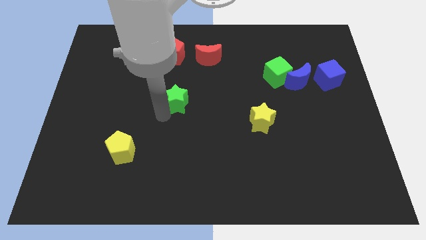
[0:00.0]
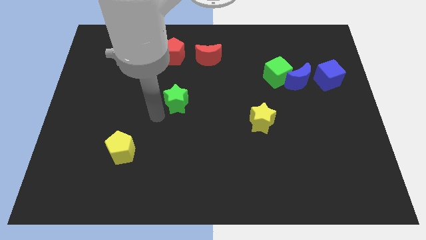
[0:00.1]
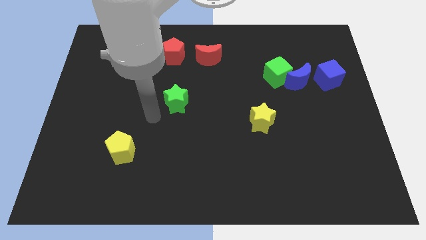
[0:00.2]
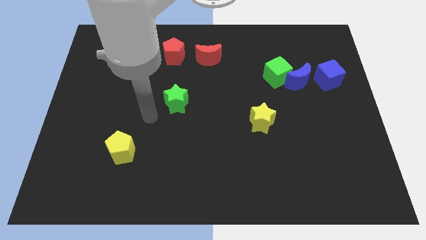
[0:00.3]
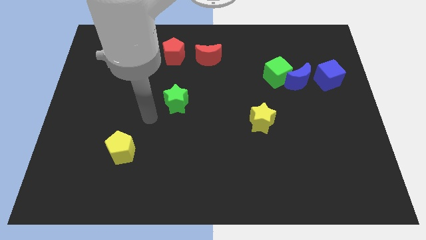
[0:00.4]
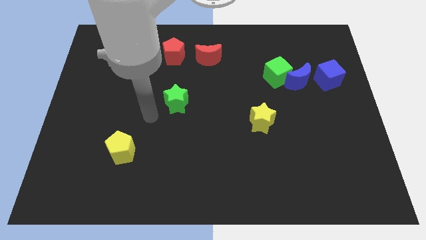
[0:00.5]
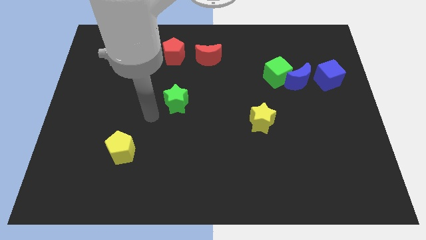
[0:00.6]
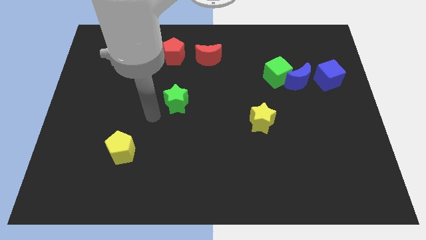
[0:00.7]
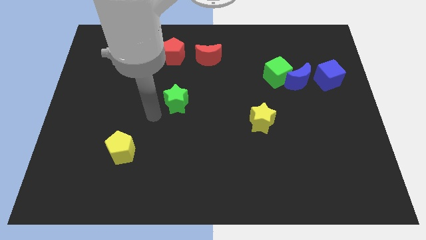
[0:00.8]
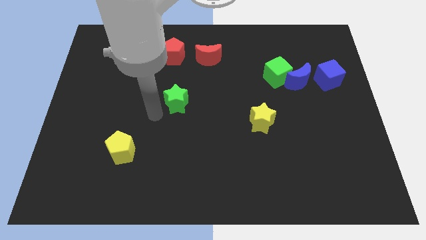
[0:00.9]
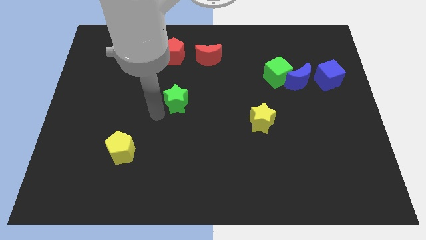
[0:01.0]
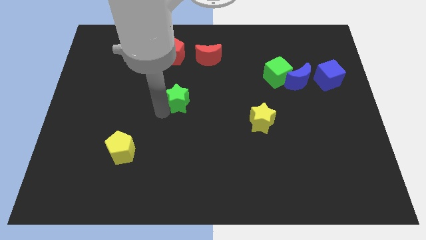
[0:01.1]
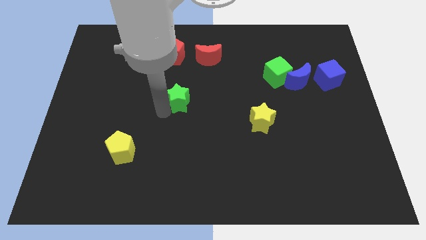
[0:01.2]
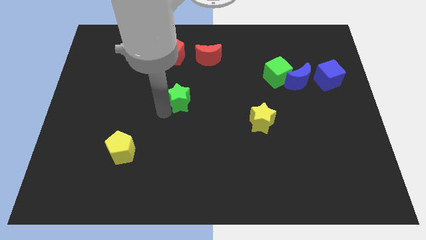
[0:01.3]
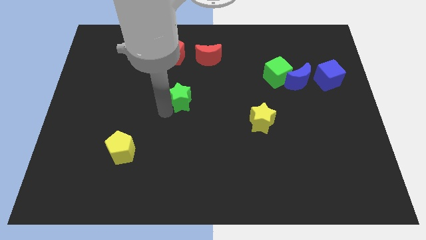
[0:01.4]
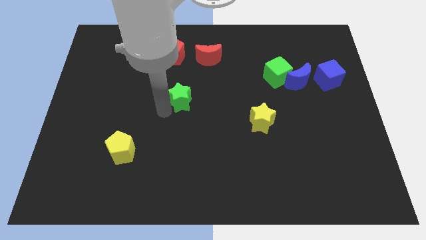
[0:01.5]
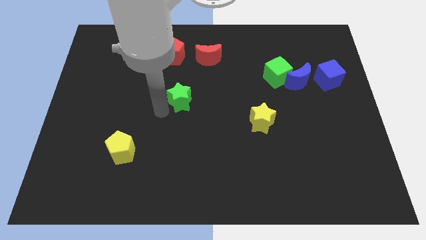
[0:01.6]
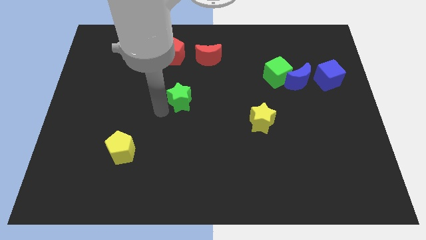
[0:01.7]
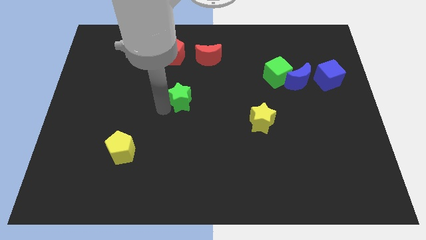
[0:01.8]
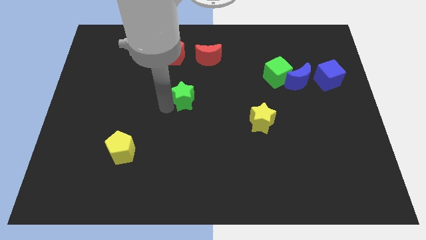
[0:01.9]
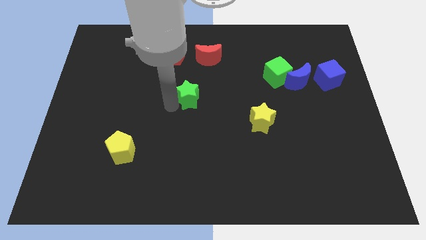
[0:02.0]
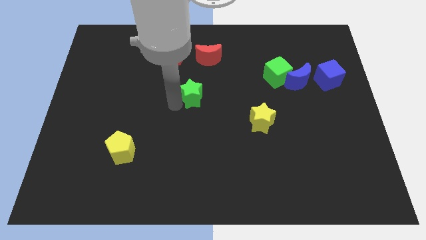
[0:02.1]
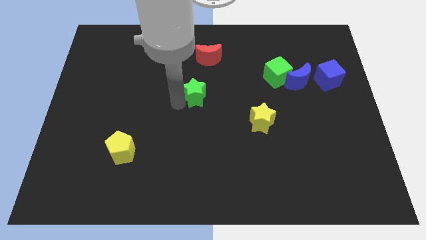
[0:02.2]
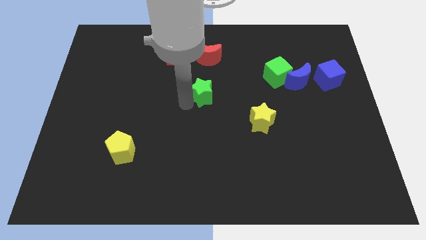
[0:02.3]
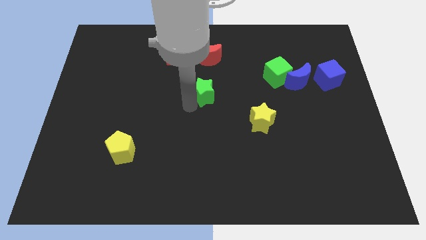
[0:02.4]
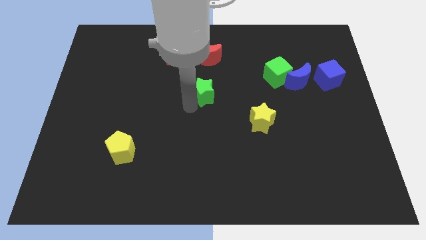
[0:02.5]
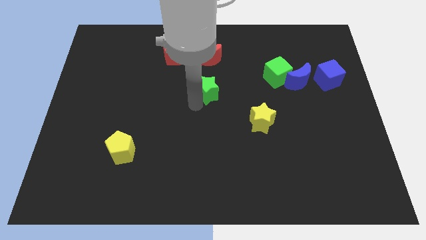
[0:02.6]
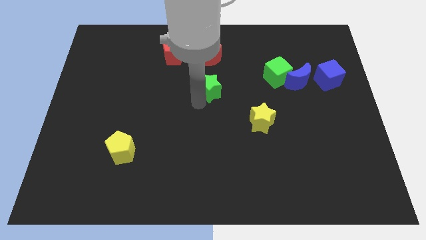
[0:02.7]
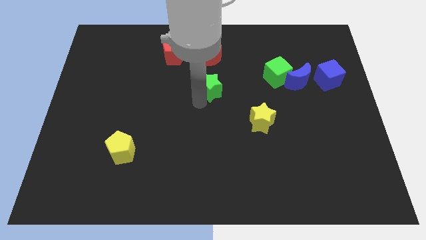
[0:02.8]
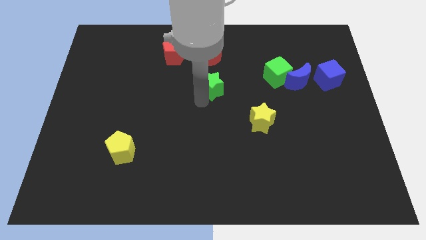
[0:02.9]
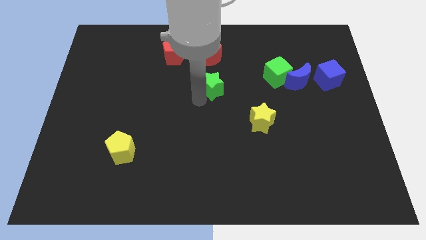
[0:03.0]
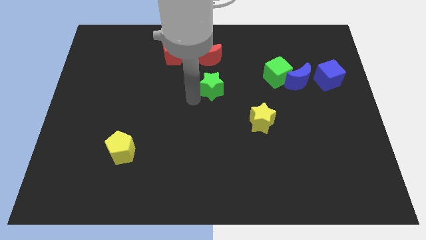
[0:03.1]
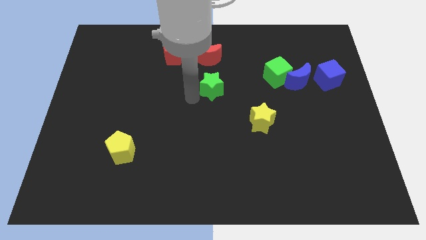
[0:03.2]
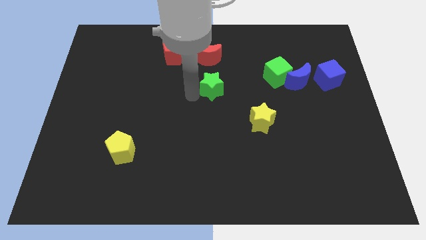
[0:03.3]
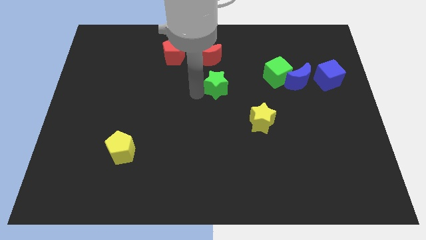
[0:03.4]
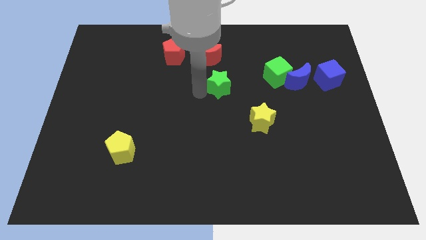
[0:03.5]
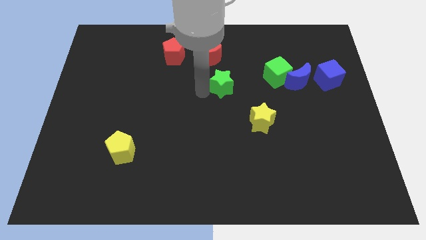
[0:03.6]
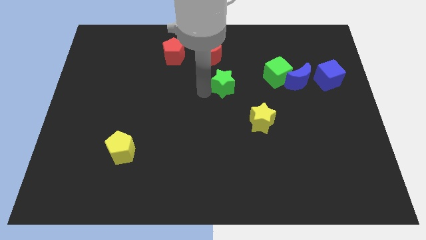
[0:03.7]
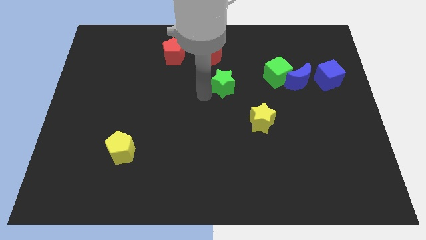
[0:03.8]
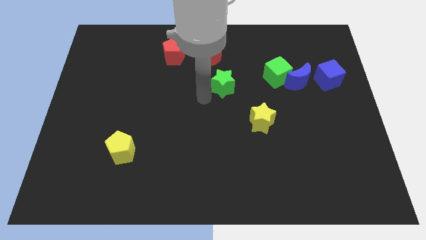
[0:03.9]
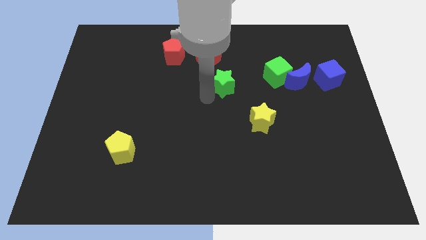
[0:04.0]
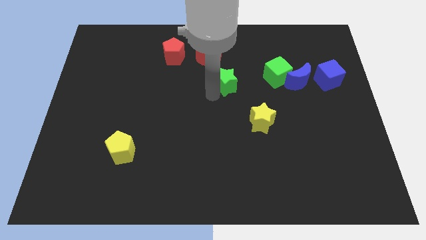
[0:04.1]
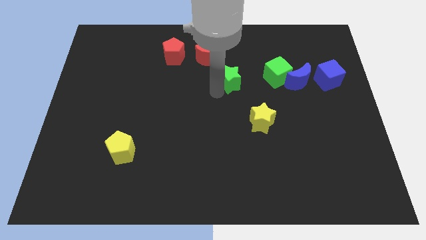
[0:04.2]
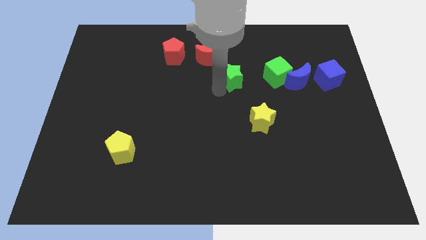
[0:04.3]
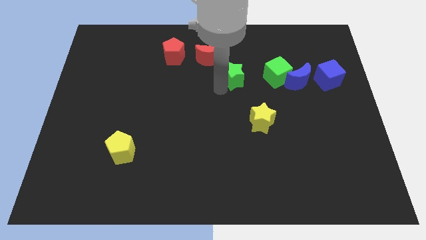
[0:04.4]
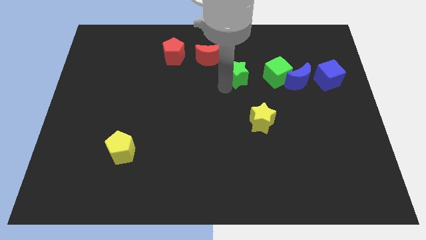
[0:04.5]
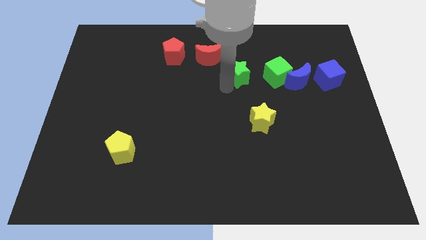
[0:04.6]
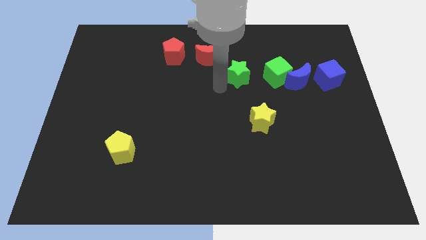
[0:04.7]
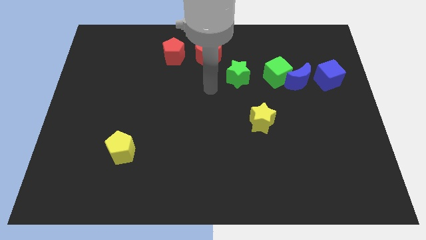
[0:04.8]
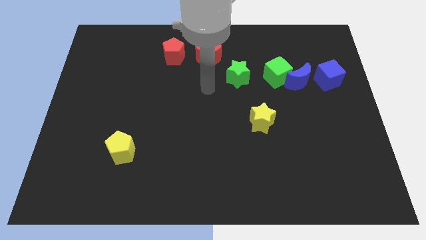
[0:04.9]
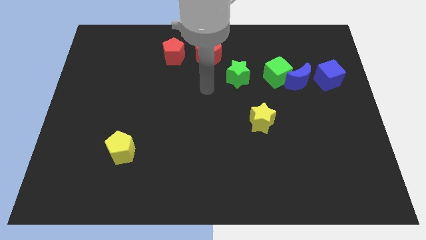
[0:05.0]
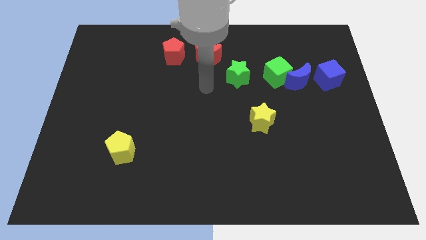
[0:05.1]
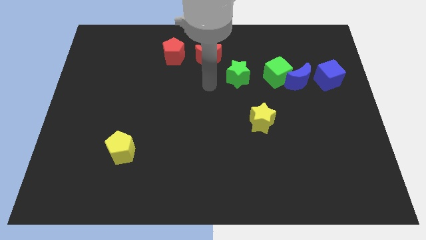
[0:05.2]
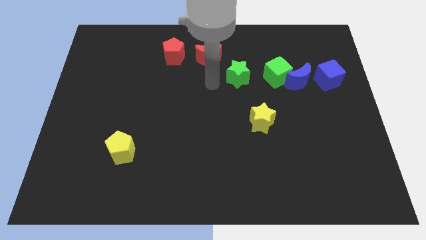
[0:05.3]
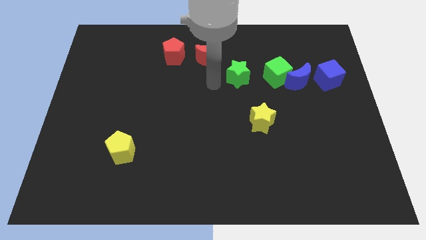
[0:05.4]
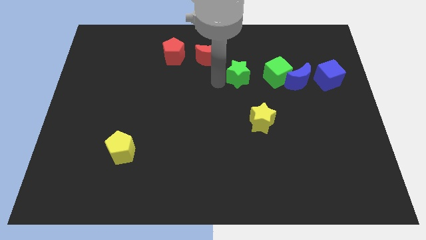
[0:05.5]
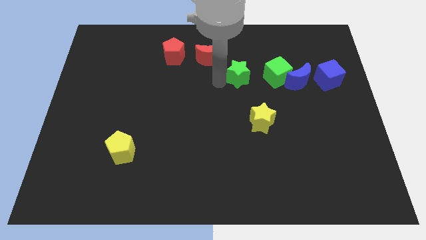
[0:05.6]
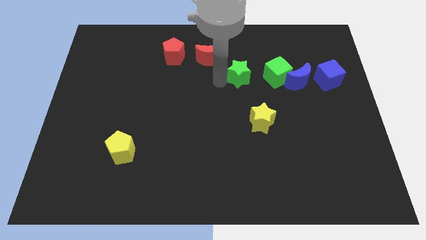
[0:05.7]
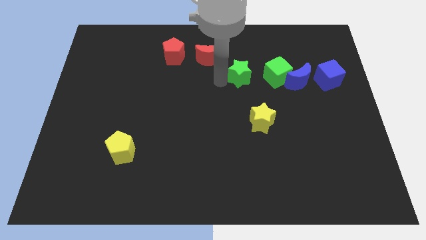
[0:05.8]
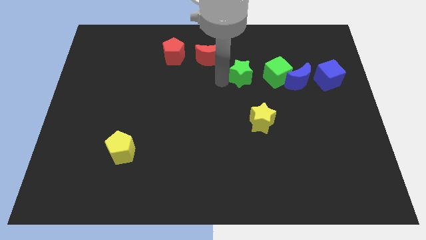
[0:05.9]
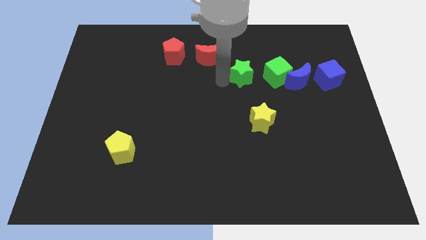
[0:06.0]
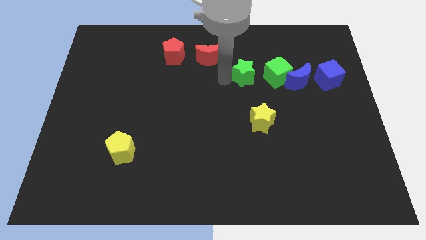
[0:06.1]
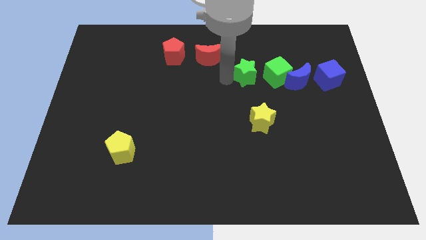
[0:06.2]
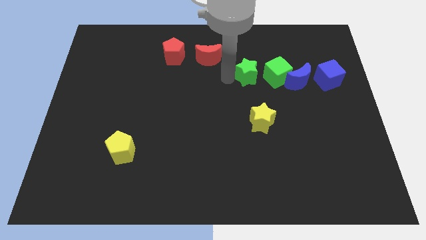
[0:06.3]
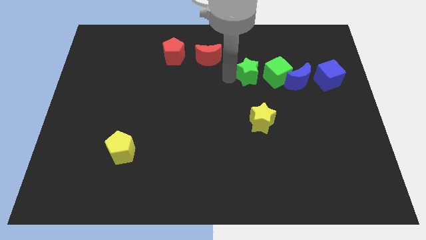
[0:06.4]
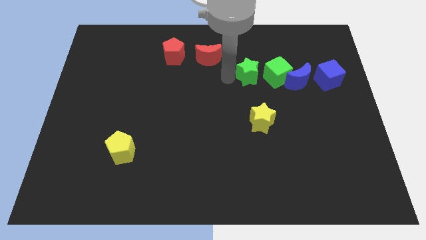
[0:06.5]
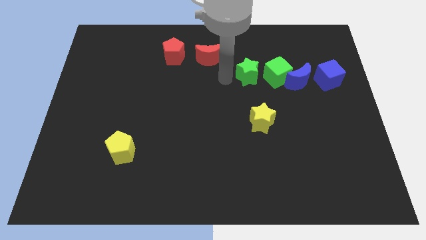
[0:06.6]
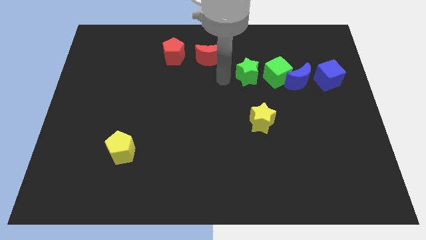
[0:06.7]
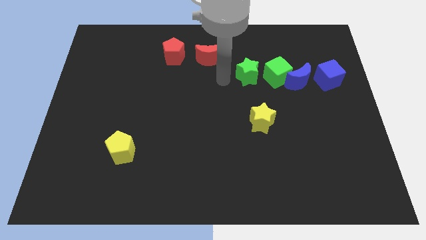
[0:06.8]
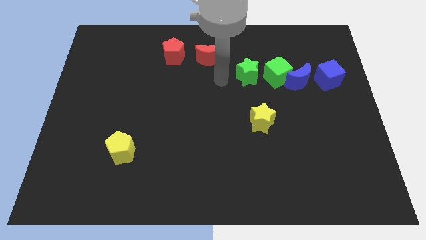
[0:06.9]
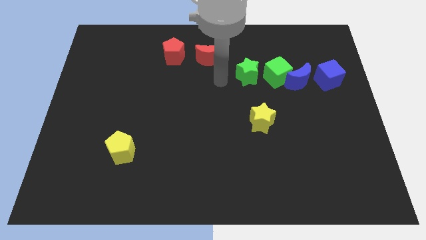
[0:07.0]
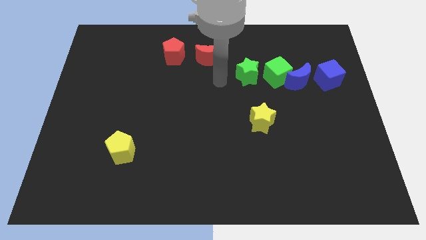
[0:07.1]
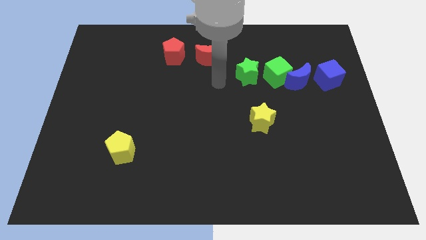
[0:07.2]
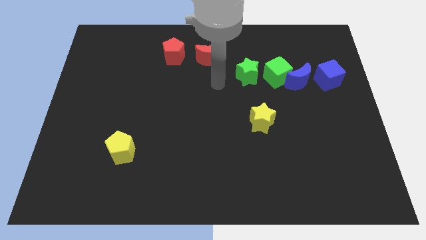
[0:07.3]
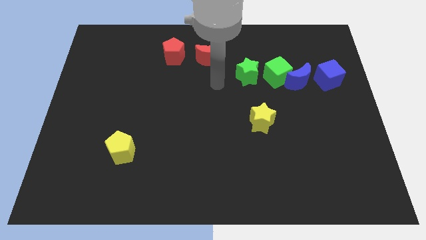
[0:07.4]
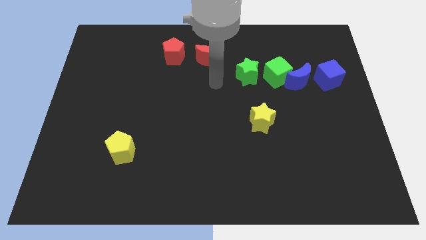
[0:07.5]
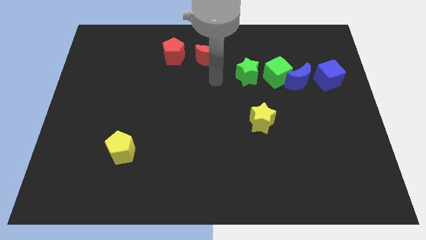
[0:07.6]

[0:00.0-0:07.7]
push the green star to the left of the green cube

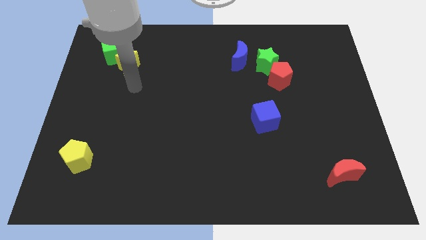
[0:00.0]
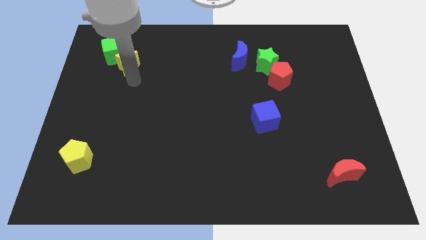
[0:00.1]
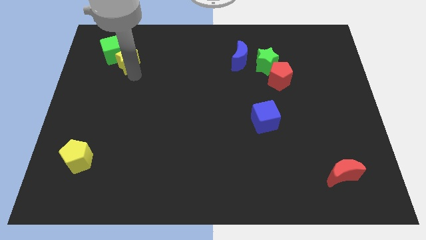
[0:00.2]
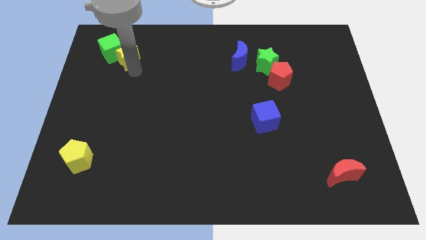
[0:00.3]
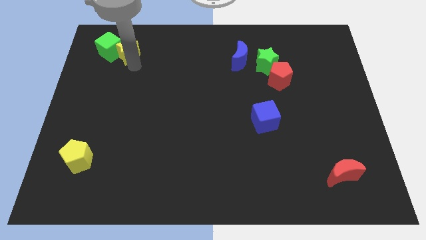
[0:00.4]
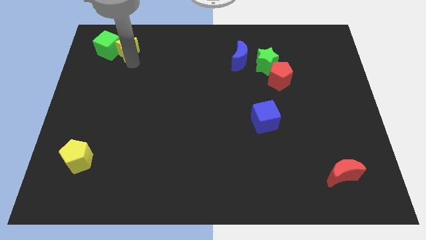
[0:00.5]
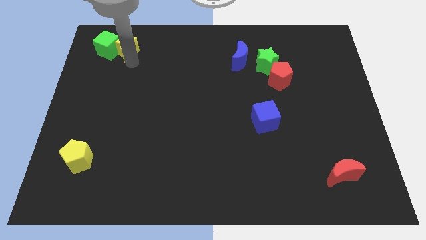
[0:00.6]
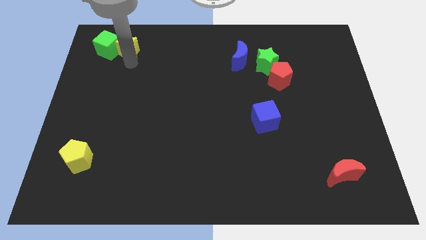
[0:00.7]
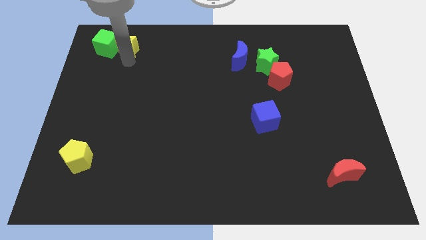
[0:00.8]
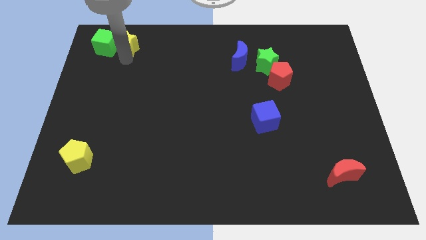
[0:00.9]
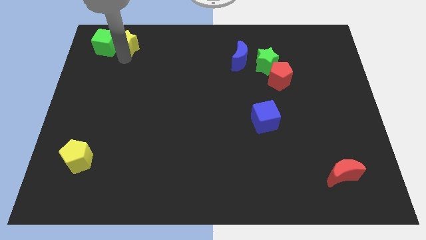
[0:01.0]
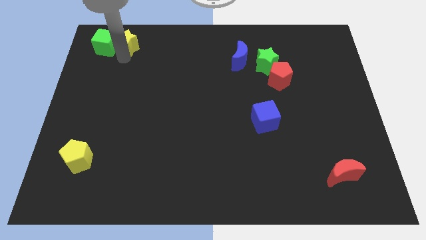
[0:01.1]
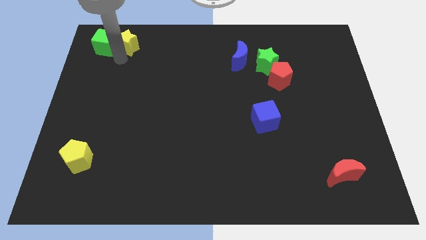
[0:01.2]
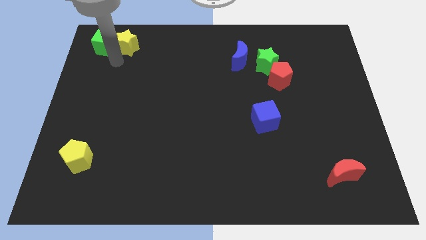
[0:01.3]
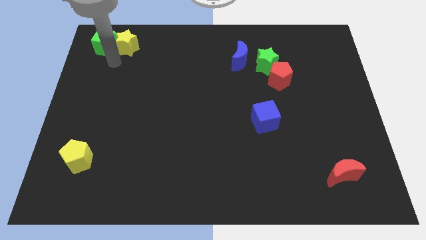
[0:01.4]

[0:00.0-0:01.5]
push the yellow star to the right of the green cube
